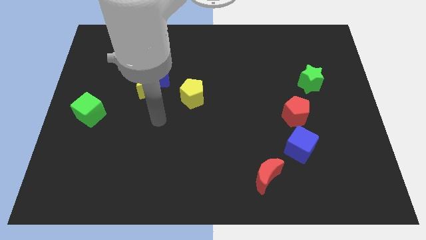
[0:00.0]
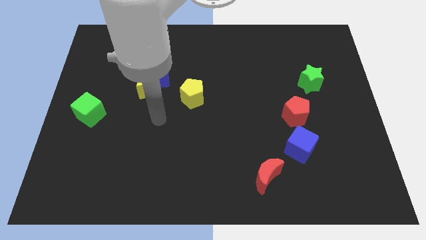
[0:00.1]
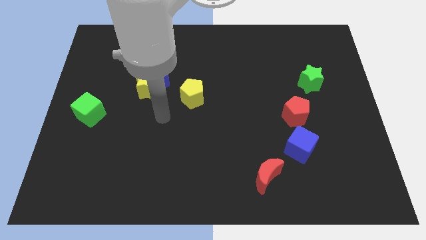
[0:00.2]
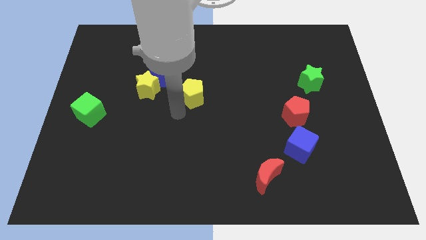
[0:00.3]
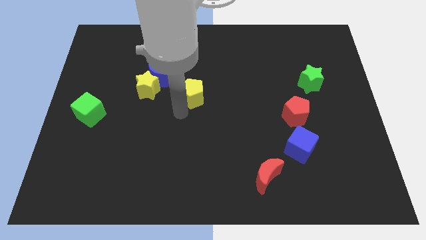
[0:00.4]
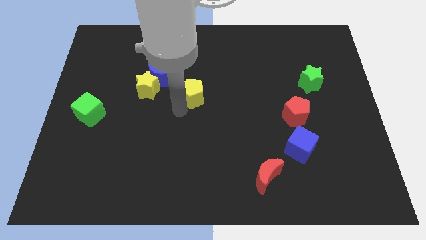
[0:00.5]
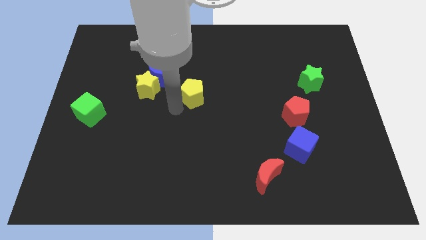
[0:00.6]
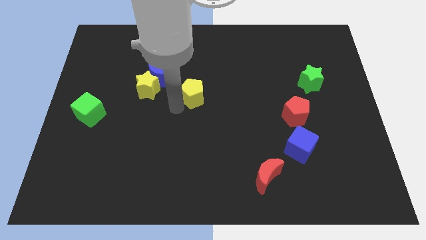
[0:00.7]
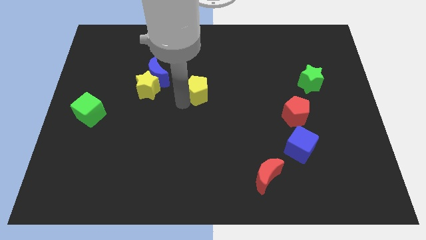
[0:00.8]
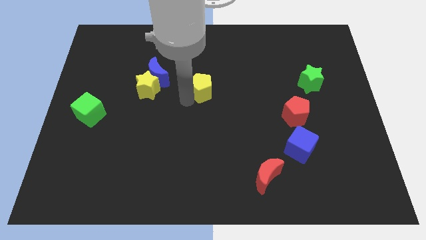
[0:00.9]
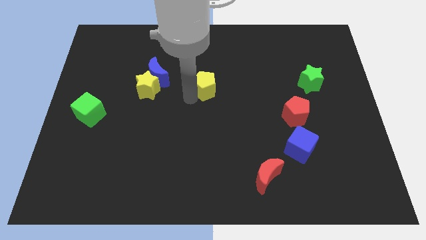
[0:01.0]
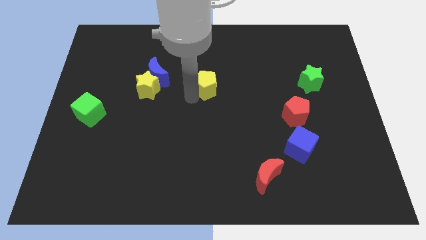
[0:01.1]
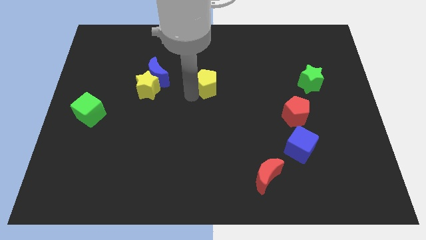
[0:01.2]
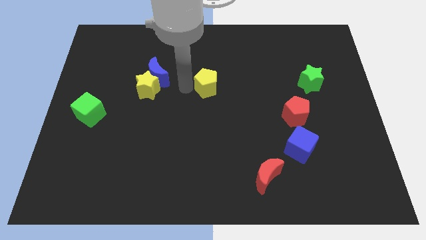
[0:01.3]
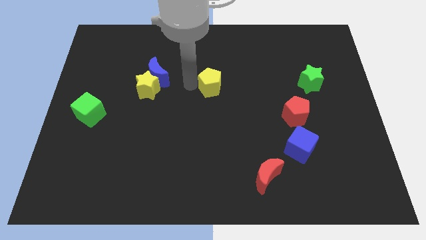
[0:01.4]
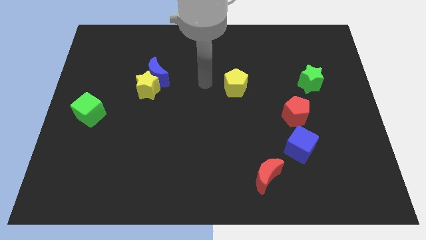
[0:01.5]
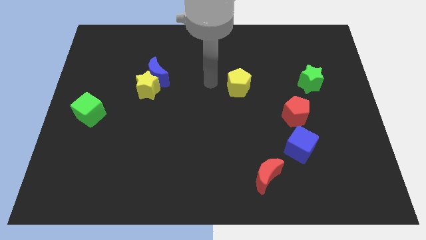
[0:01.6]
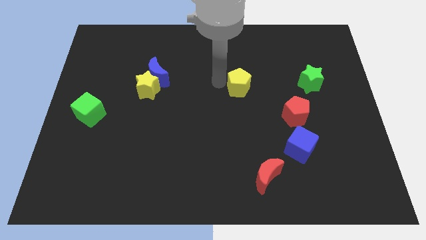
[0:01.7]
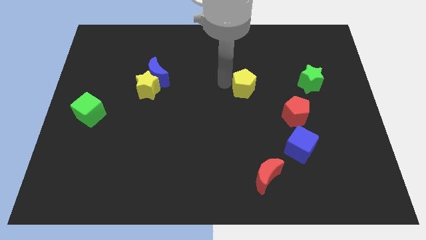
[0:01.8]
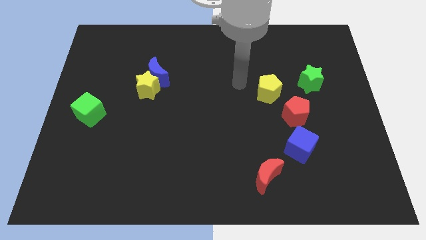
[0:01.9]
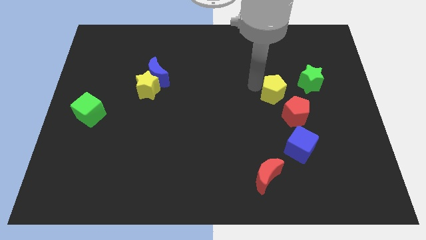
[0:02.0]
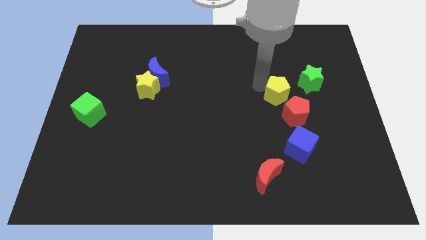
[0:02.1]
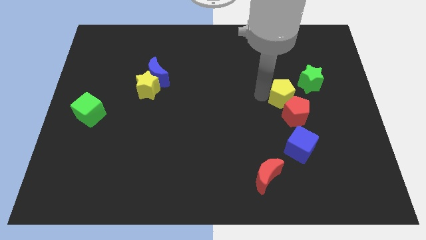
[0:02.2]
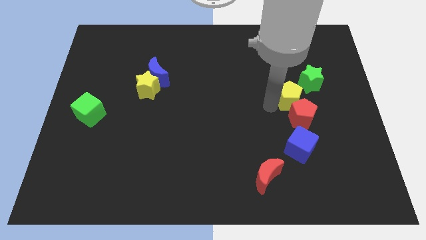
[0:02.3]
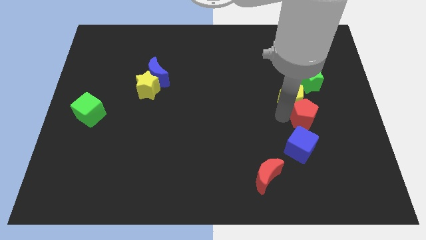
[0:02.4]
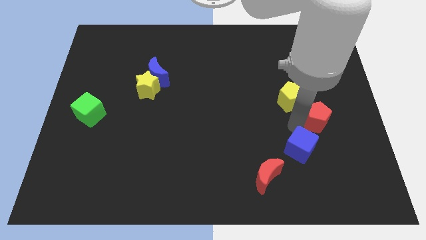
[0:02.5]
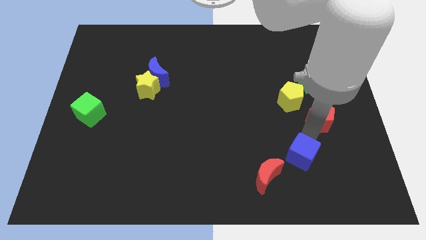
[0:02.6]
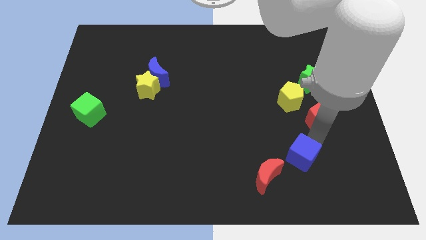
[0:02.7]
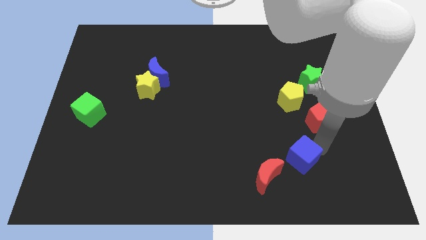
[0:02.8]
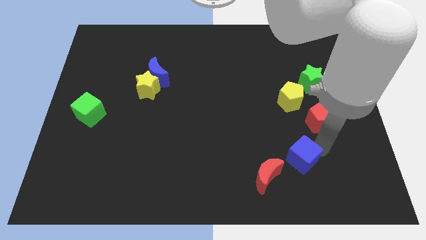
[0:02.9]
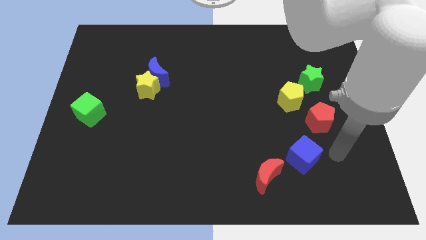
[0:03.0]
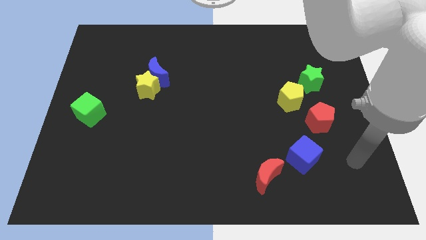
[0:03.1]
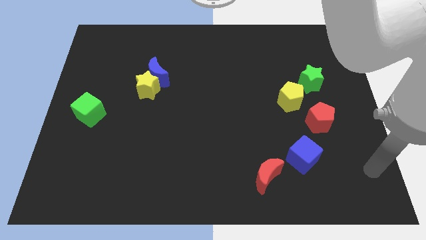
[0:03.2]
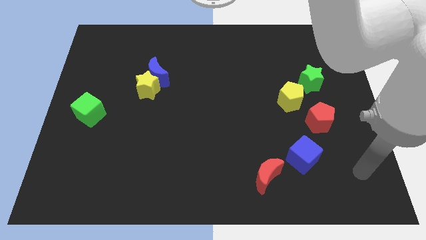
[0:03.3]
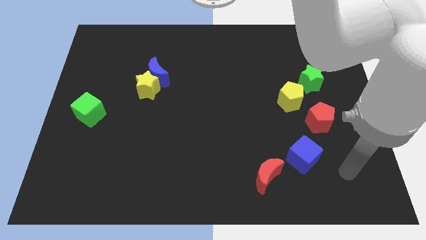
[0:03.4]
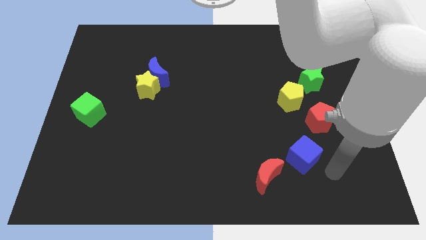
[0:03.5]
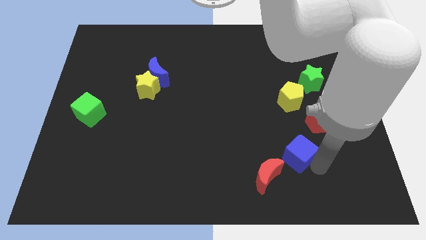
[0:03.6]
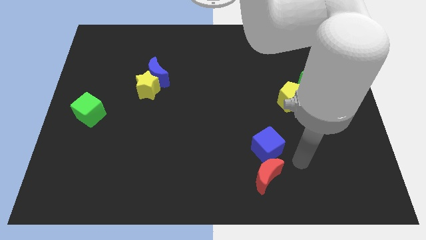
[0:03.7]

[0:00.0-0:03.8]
place the yellow pentagon diagonally to the green star

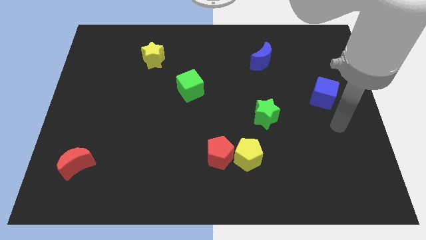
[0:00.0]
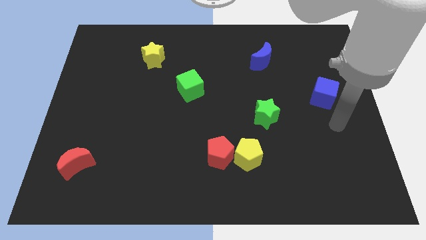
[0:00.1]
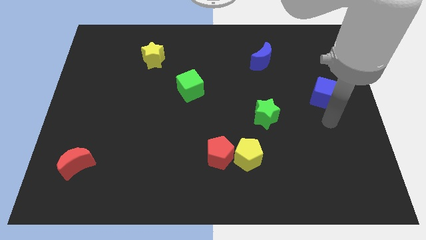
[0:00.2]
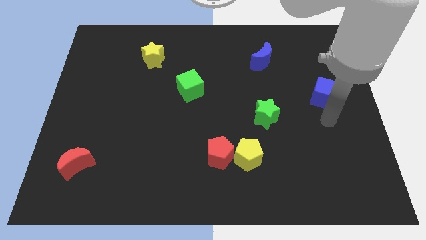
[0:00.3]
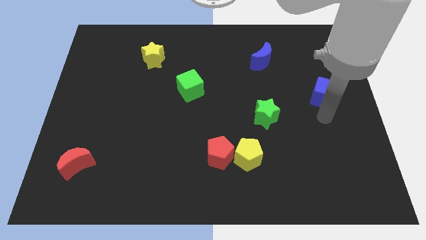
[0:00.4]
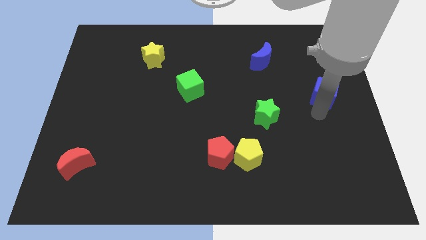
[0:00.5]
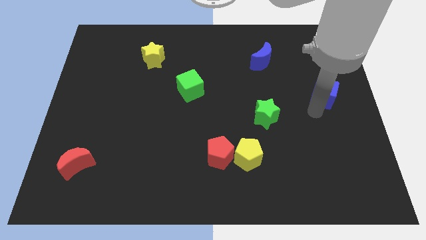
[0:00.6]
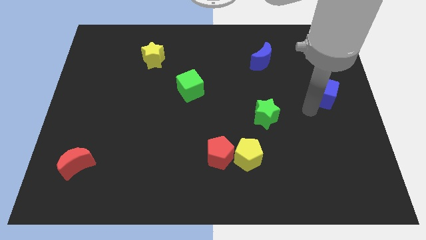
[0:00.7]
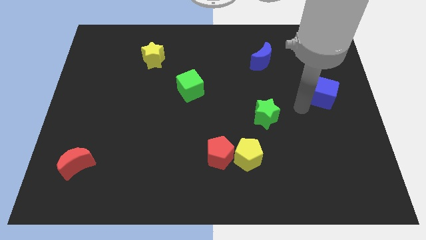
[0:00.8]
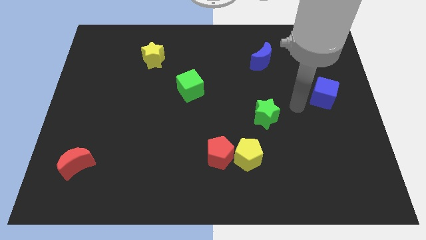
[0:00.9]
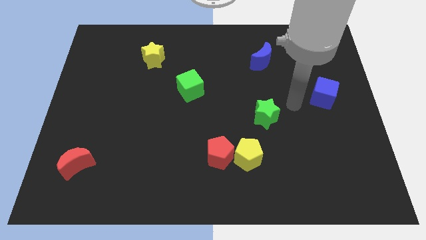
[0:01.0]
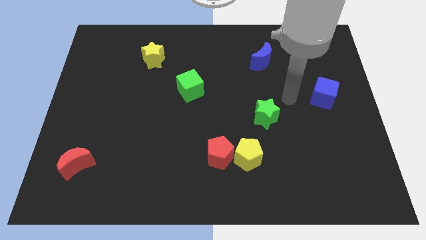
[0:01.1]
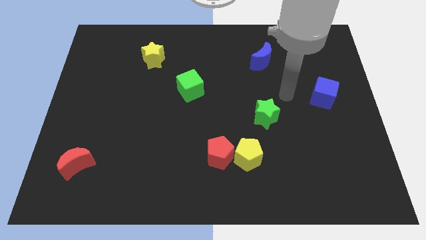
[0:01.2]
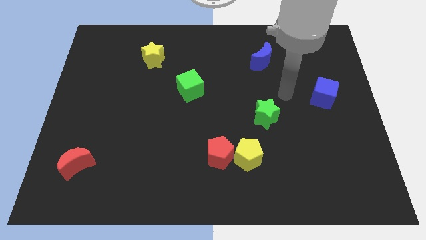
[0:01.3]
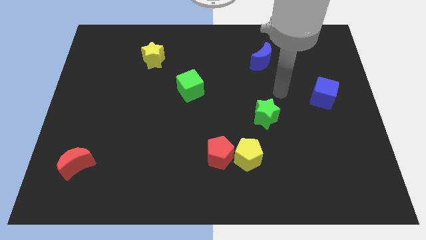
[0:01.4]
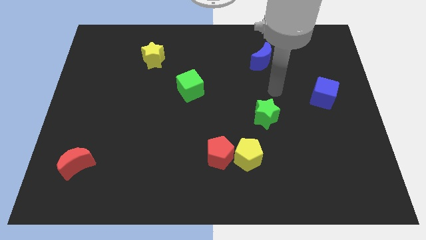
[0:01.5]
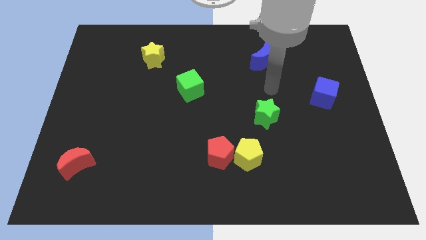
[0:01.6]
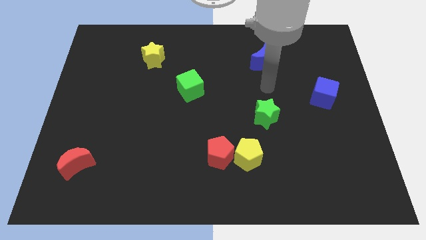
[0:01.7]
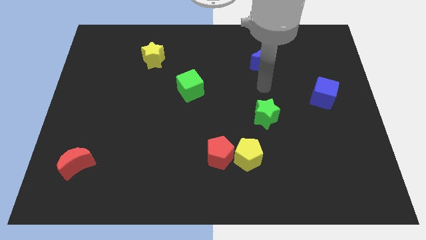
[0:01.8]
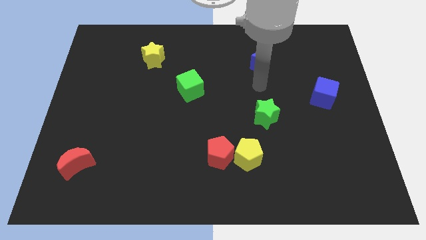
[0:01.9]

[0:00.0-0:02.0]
move the arm in between the green star and blue cube

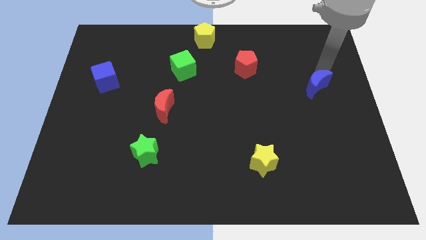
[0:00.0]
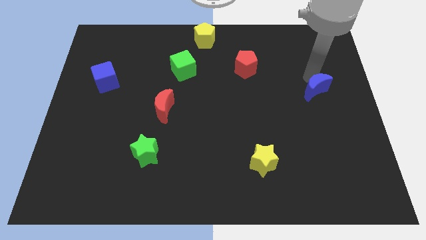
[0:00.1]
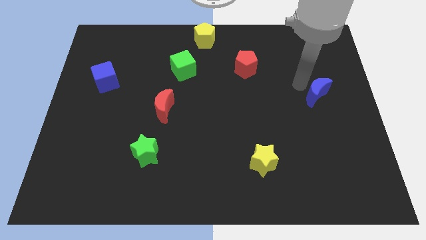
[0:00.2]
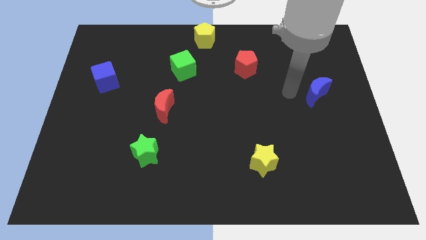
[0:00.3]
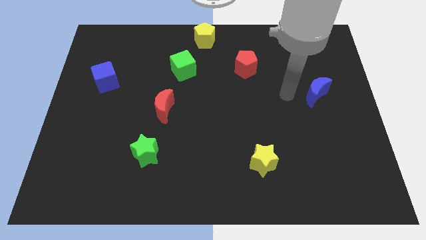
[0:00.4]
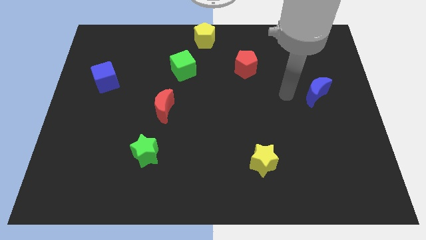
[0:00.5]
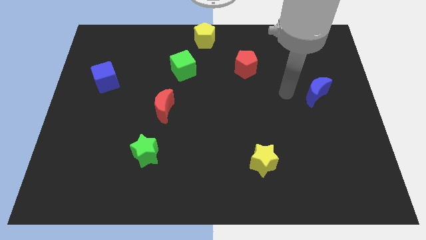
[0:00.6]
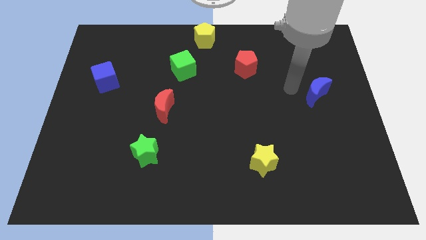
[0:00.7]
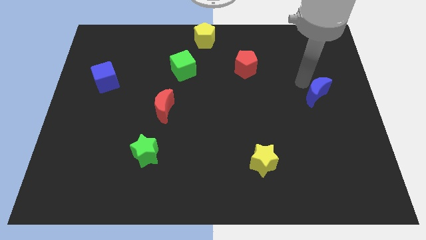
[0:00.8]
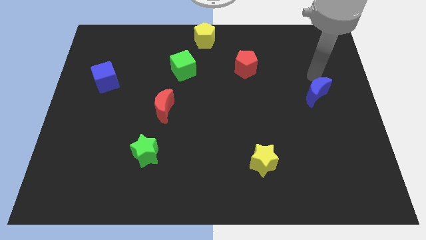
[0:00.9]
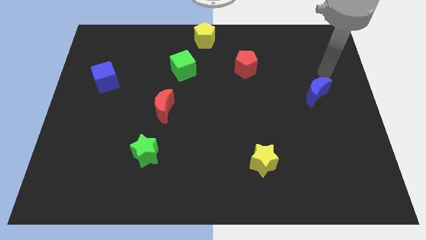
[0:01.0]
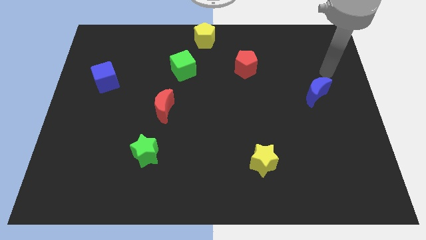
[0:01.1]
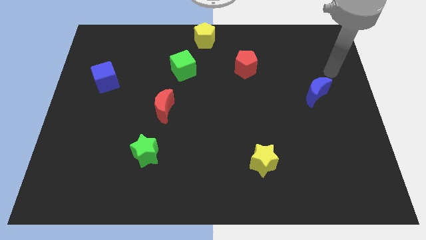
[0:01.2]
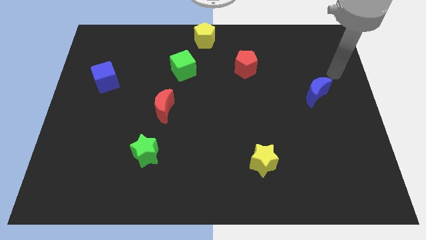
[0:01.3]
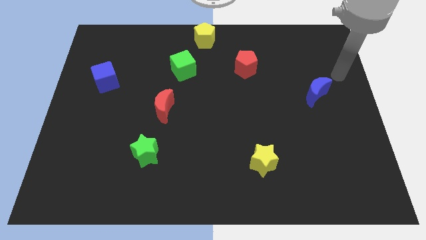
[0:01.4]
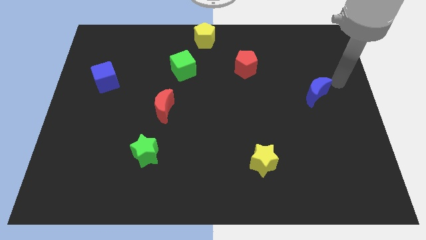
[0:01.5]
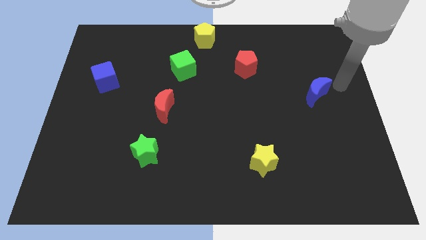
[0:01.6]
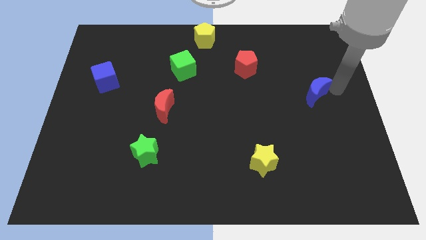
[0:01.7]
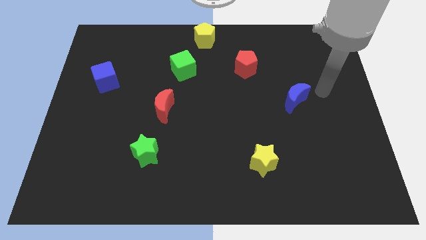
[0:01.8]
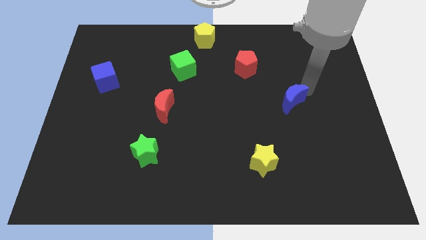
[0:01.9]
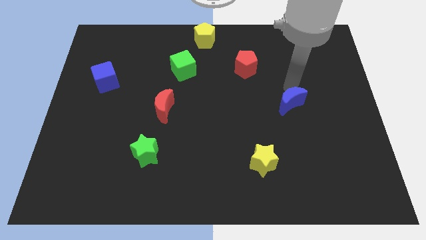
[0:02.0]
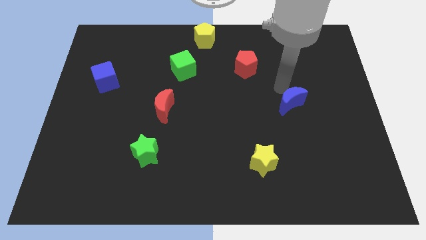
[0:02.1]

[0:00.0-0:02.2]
move the blue crescent towards the top side of the yellow star

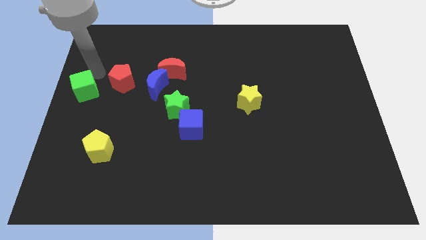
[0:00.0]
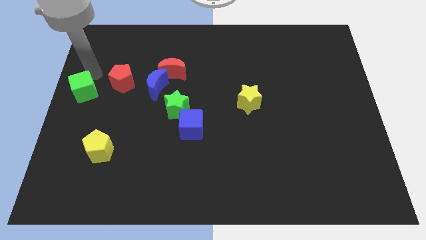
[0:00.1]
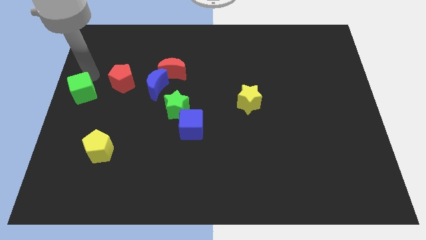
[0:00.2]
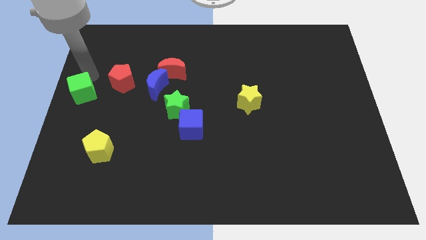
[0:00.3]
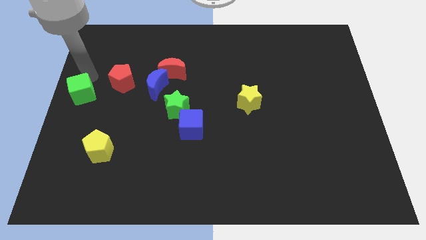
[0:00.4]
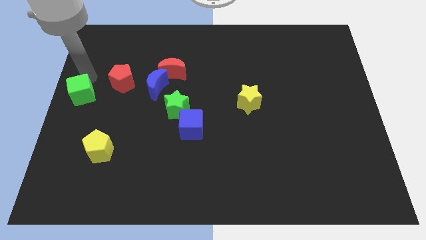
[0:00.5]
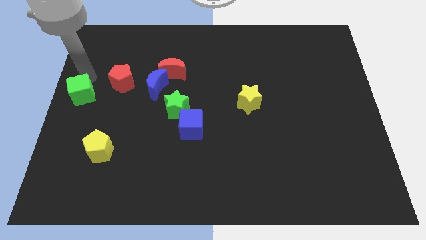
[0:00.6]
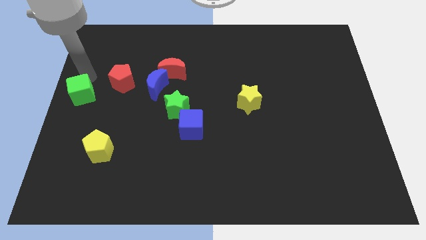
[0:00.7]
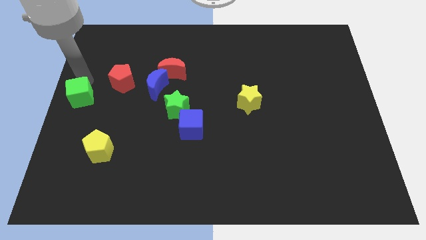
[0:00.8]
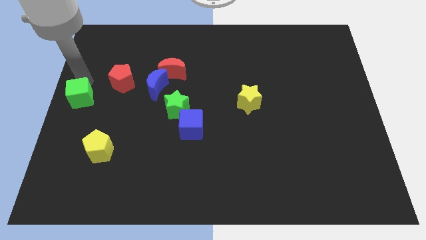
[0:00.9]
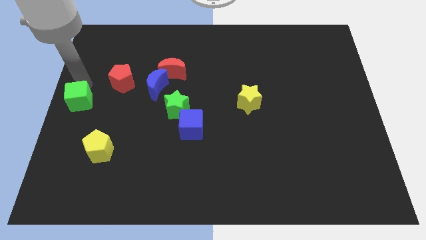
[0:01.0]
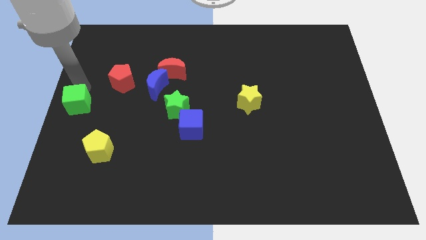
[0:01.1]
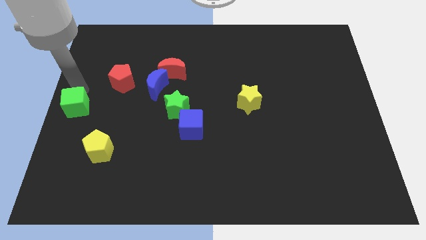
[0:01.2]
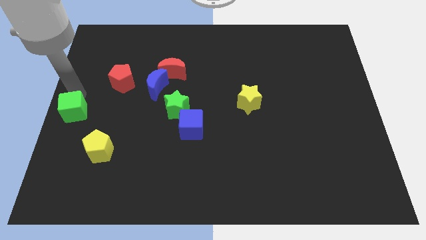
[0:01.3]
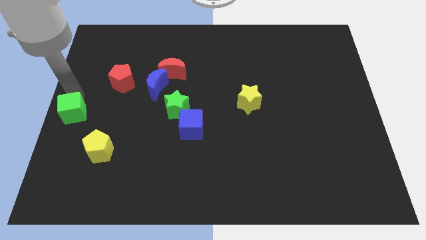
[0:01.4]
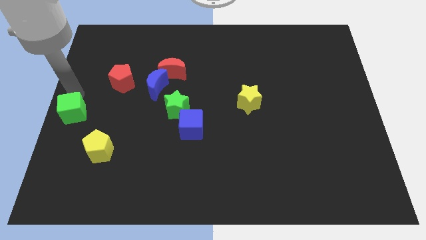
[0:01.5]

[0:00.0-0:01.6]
place the green cube diagonally top left of the yellow pentagon
